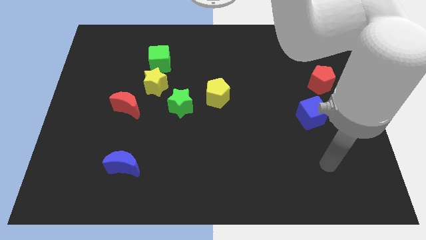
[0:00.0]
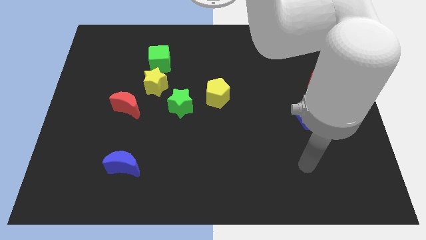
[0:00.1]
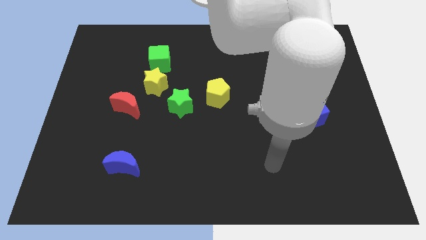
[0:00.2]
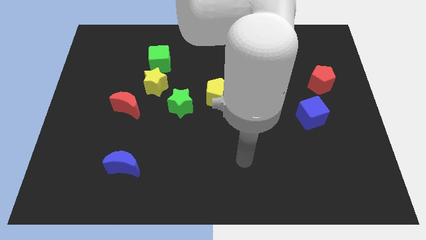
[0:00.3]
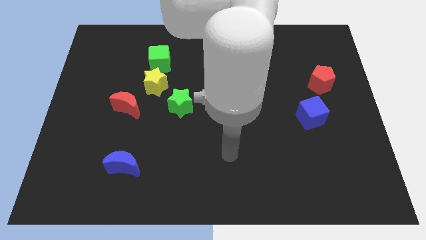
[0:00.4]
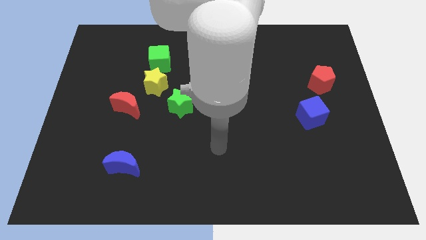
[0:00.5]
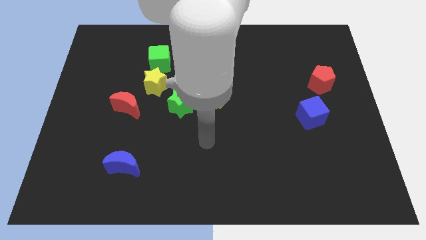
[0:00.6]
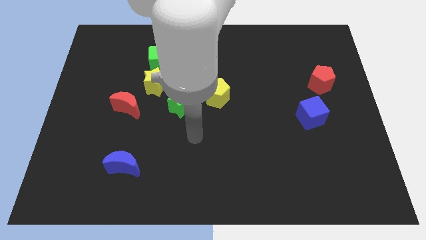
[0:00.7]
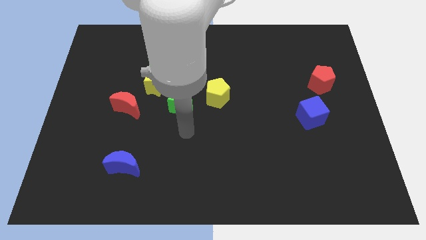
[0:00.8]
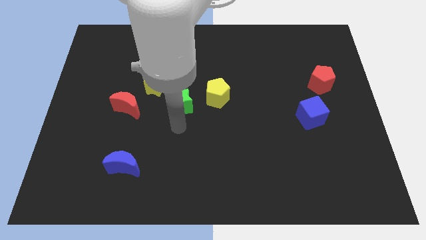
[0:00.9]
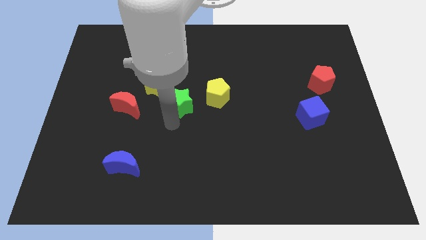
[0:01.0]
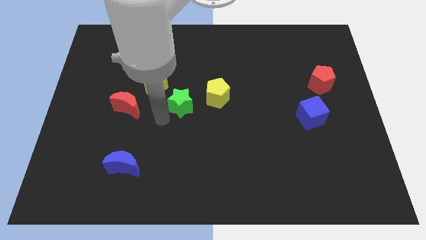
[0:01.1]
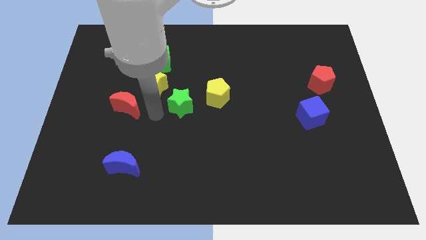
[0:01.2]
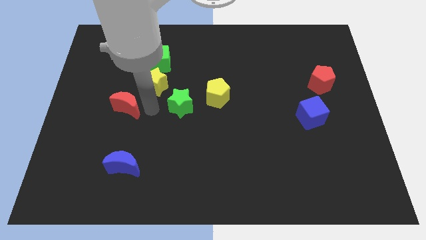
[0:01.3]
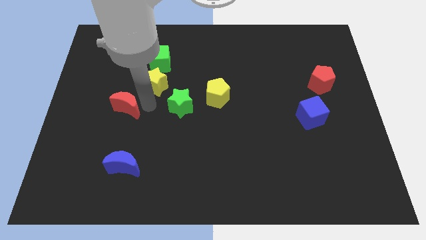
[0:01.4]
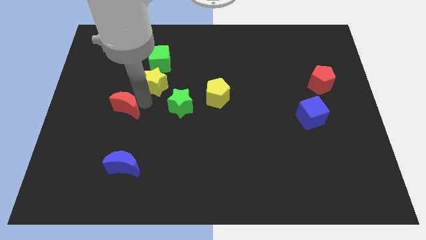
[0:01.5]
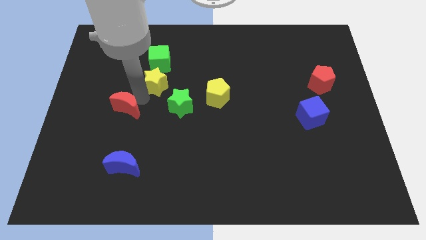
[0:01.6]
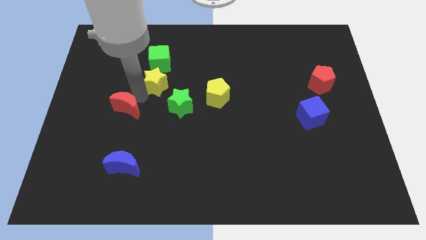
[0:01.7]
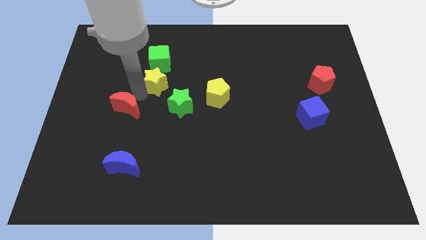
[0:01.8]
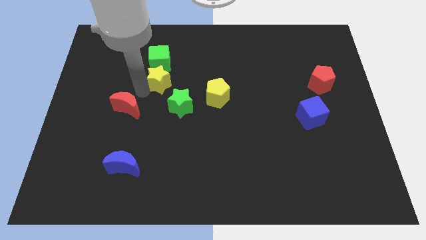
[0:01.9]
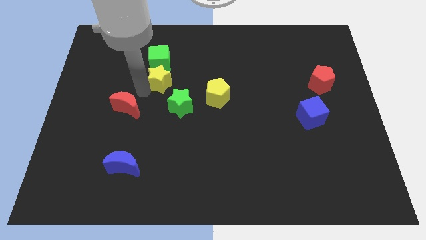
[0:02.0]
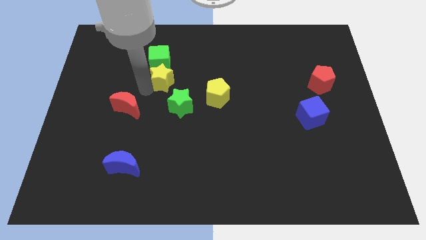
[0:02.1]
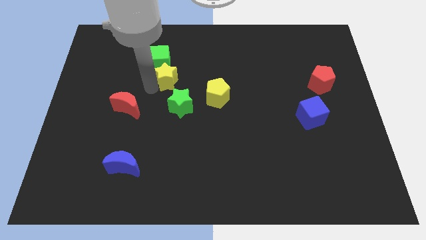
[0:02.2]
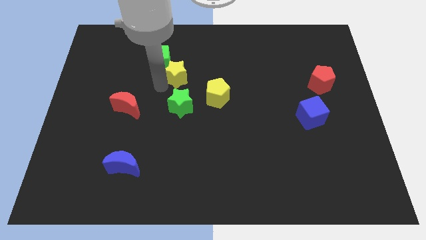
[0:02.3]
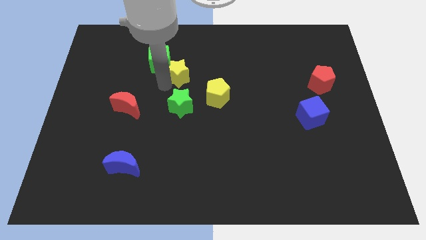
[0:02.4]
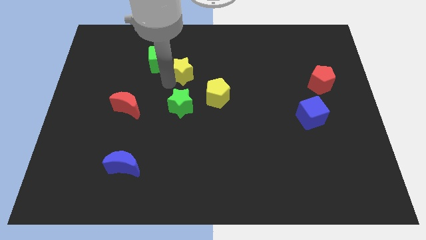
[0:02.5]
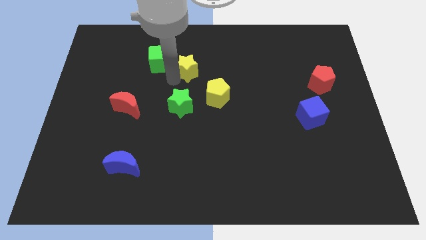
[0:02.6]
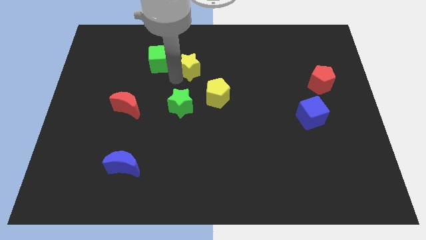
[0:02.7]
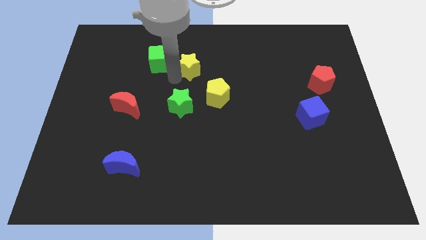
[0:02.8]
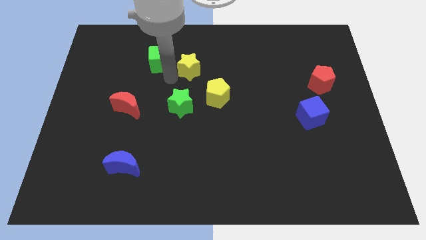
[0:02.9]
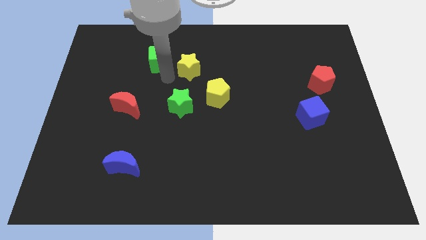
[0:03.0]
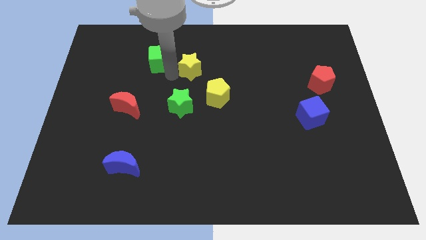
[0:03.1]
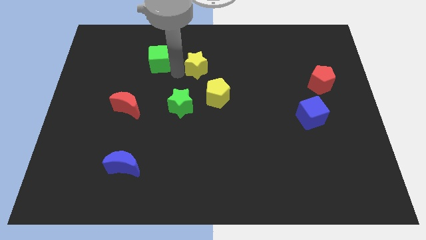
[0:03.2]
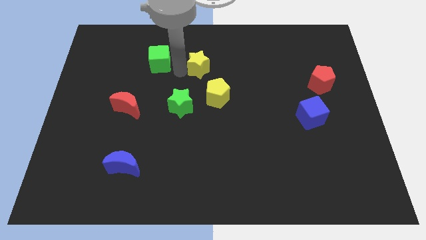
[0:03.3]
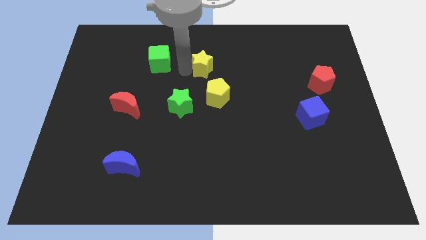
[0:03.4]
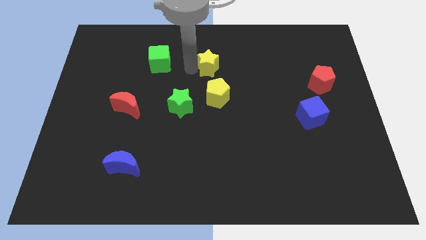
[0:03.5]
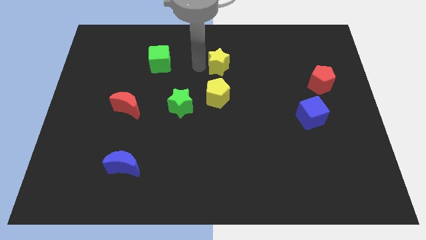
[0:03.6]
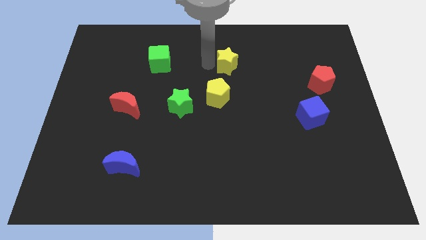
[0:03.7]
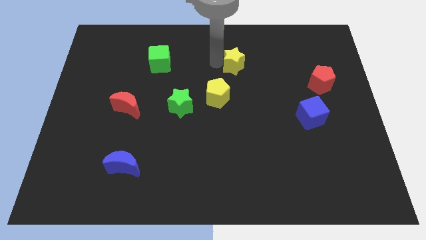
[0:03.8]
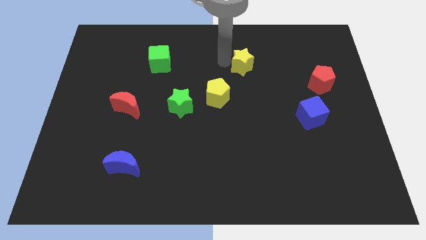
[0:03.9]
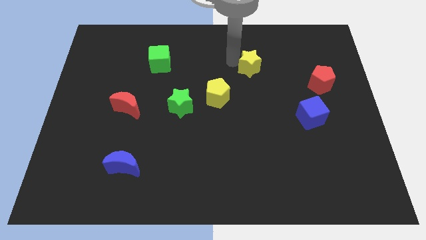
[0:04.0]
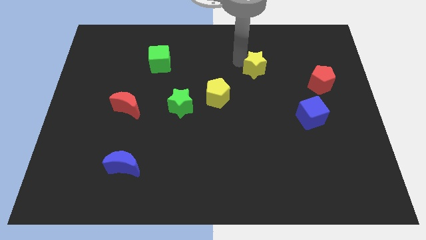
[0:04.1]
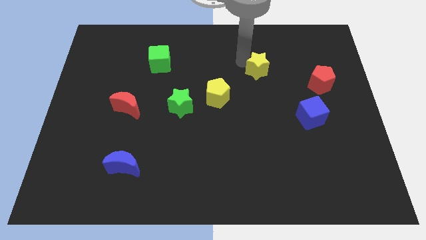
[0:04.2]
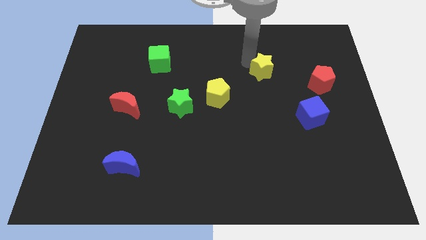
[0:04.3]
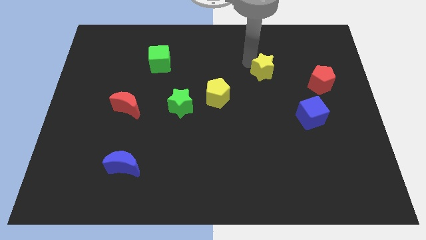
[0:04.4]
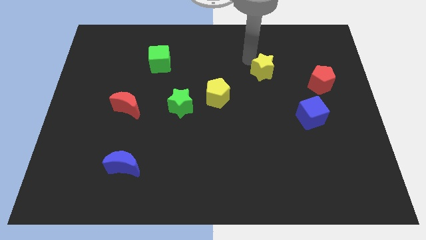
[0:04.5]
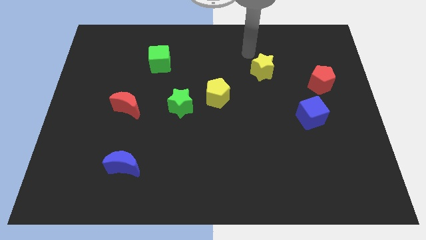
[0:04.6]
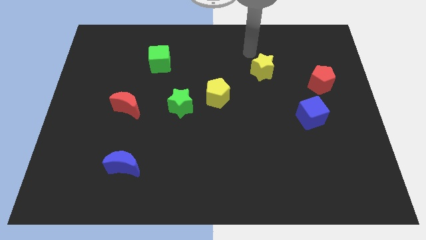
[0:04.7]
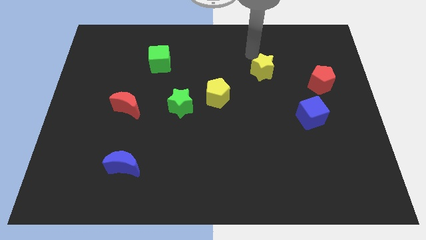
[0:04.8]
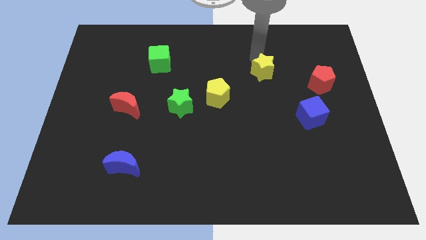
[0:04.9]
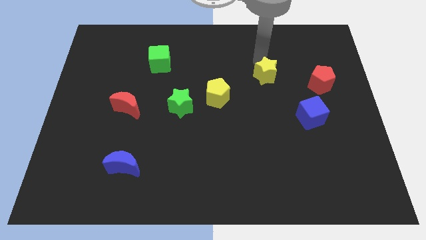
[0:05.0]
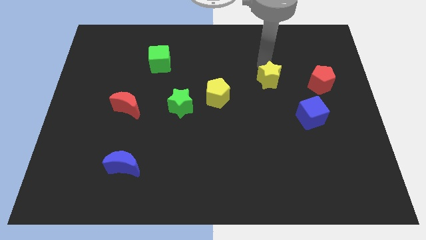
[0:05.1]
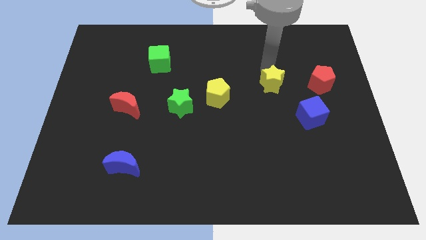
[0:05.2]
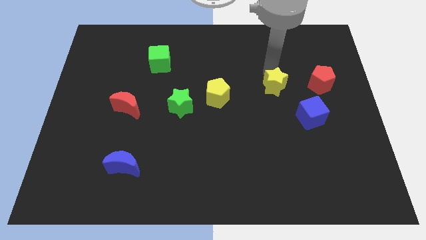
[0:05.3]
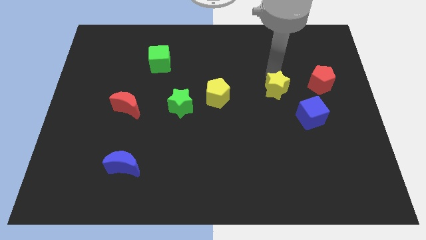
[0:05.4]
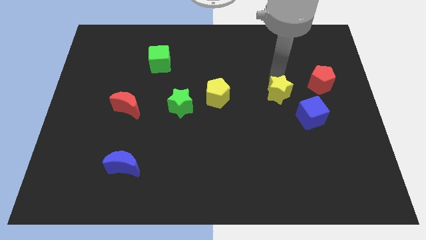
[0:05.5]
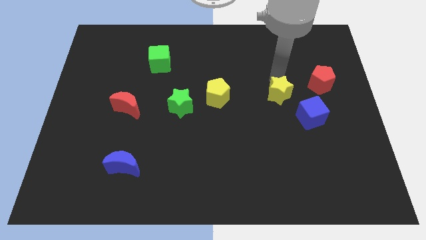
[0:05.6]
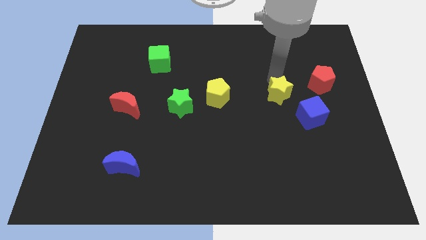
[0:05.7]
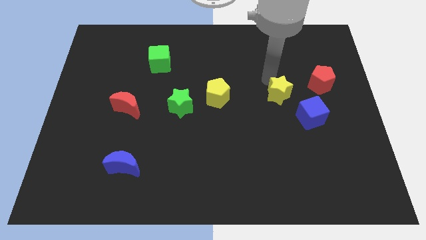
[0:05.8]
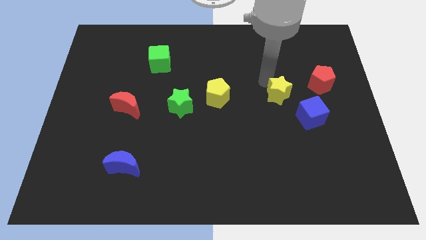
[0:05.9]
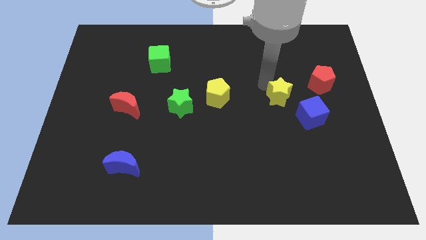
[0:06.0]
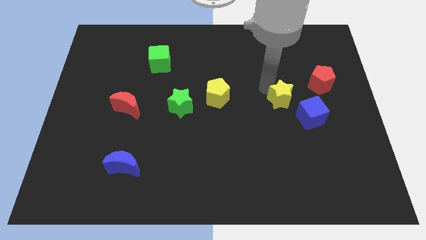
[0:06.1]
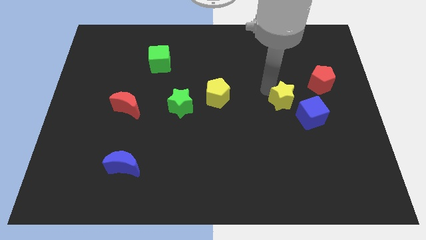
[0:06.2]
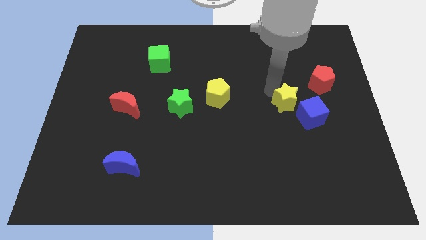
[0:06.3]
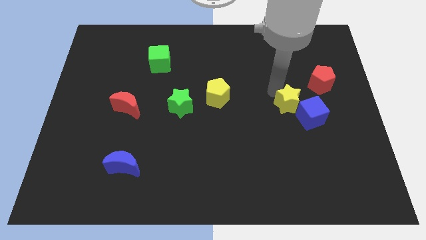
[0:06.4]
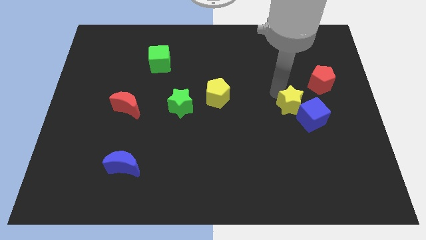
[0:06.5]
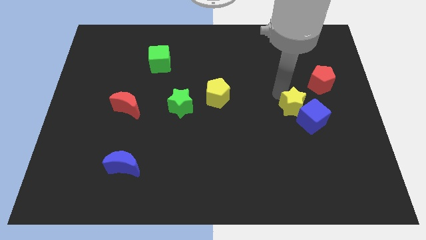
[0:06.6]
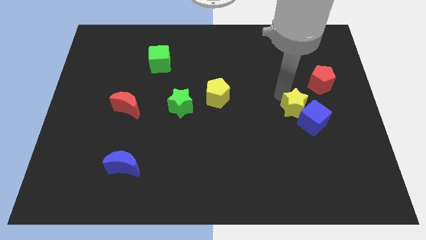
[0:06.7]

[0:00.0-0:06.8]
put the yellow star next to the blue cube

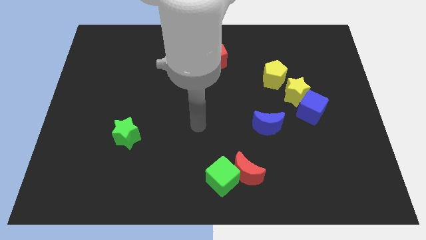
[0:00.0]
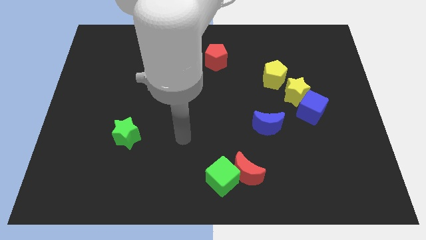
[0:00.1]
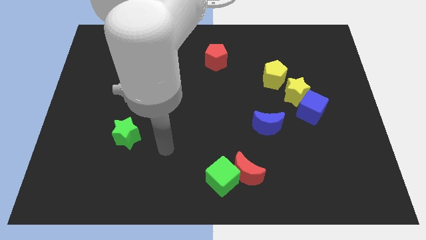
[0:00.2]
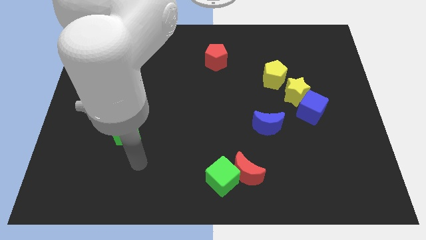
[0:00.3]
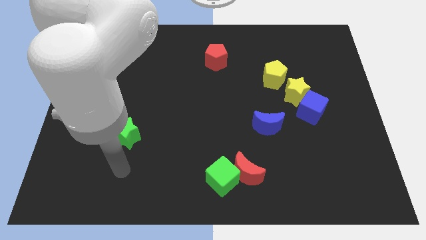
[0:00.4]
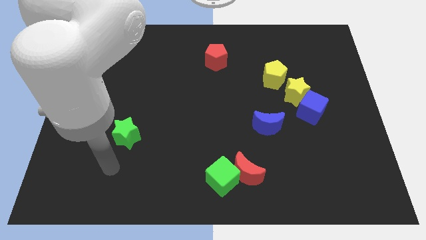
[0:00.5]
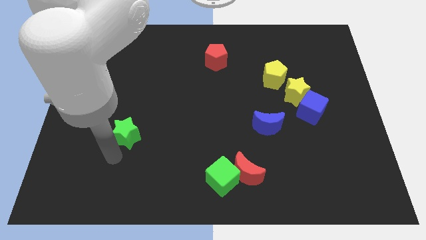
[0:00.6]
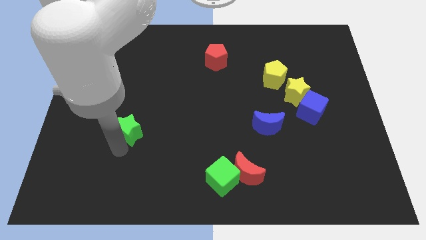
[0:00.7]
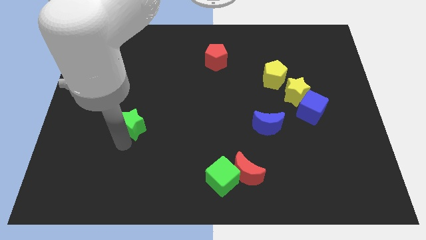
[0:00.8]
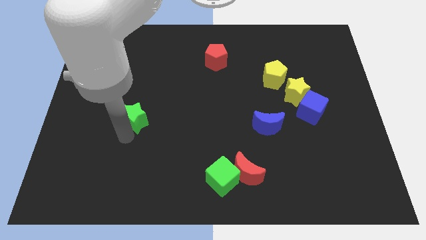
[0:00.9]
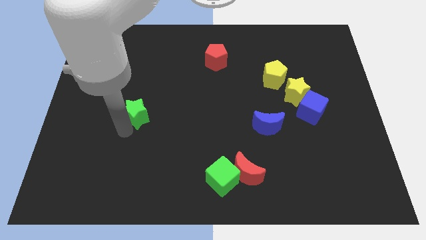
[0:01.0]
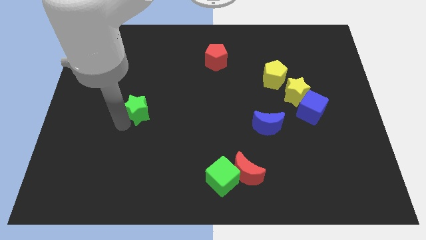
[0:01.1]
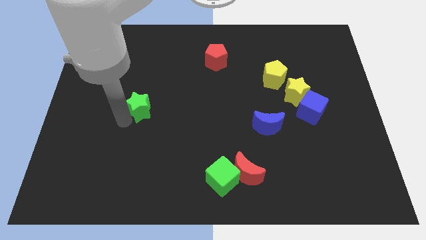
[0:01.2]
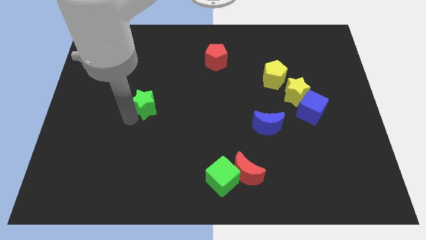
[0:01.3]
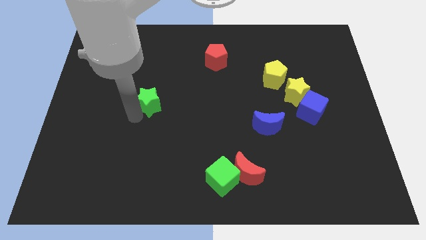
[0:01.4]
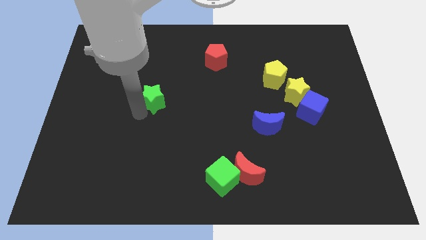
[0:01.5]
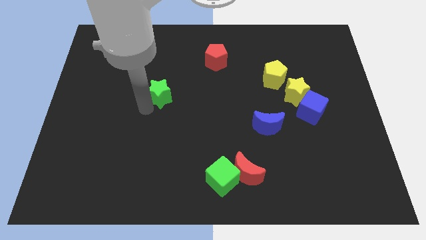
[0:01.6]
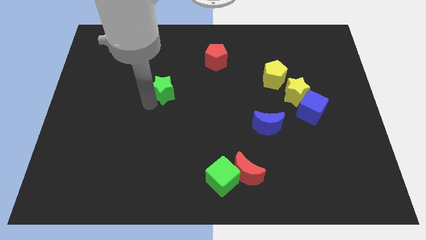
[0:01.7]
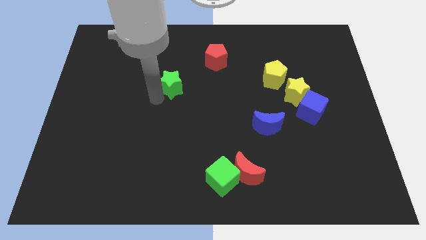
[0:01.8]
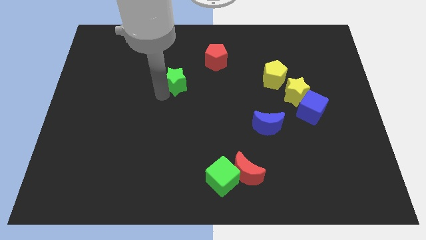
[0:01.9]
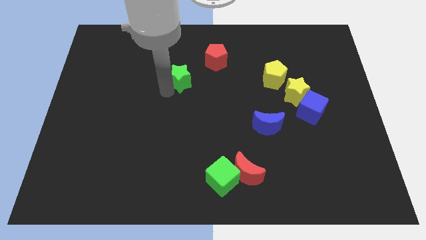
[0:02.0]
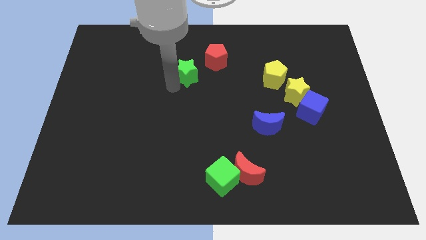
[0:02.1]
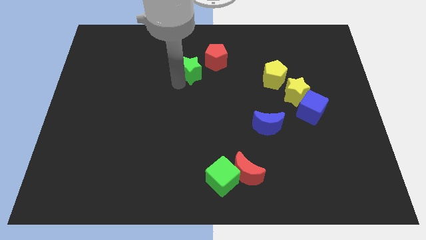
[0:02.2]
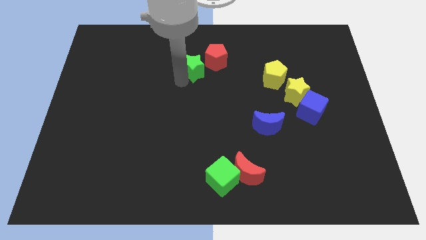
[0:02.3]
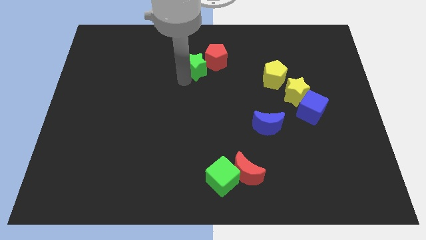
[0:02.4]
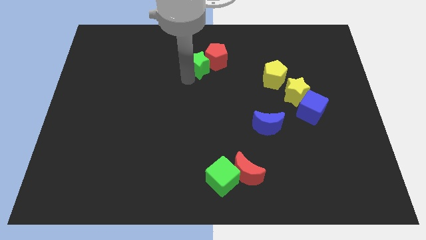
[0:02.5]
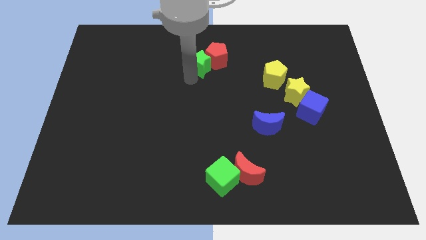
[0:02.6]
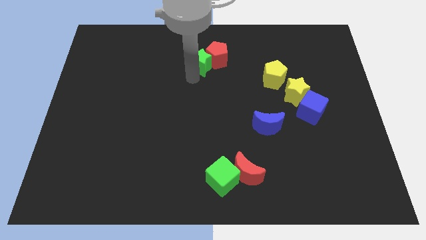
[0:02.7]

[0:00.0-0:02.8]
slide the green star close to the red pentagon
